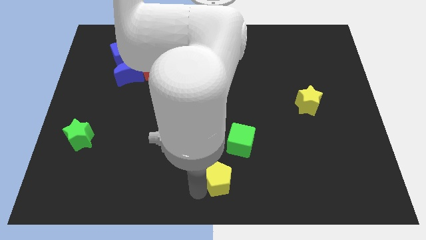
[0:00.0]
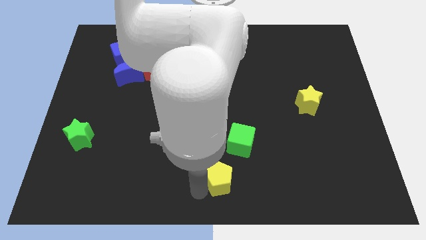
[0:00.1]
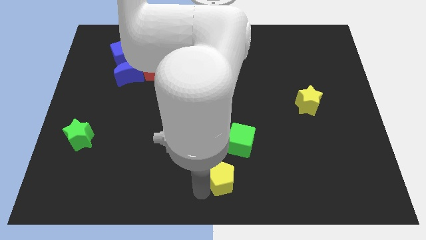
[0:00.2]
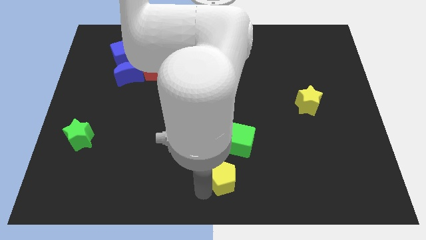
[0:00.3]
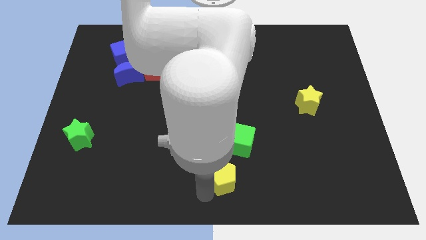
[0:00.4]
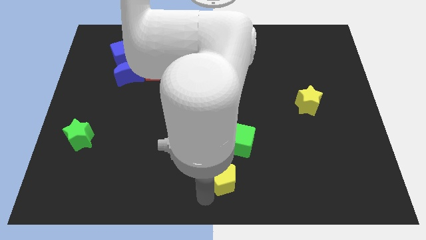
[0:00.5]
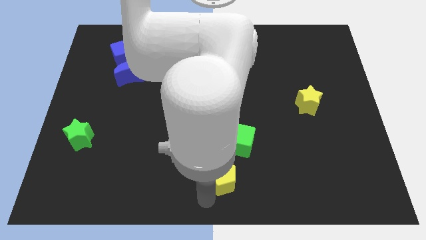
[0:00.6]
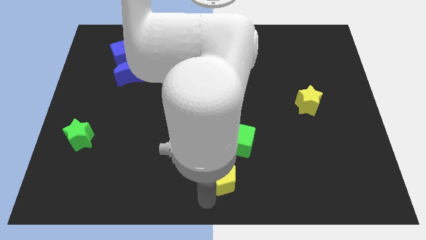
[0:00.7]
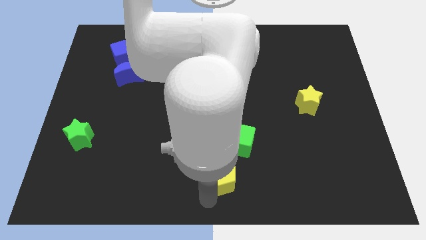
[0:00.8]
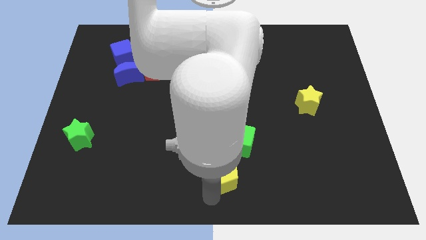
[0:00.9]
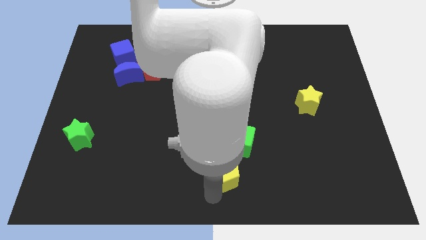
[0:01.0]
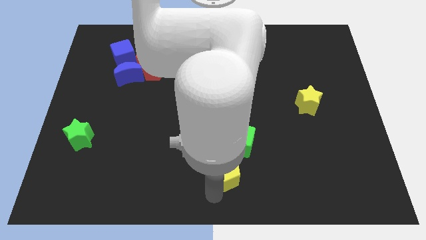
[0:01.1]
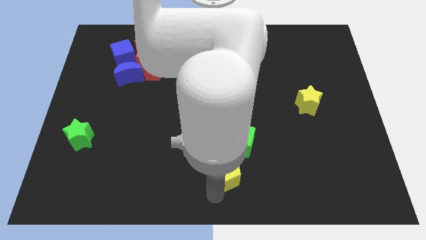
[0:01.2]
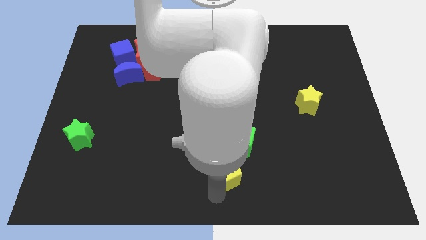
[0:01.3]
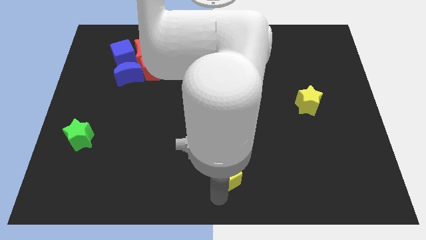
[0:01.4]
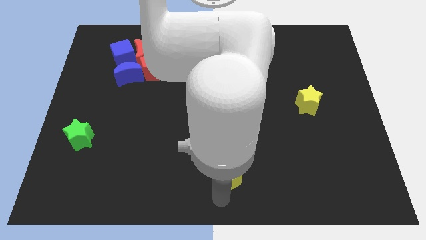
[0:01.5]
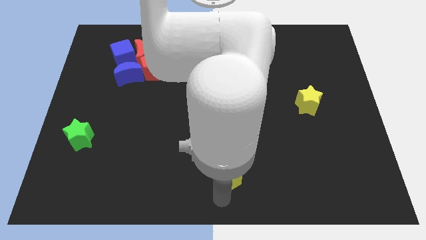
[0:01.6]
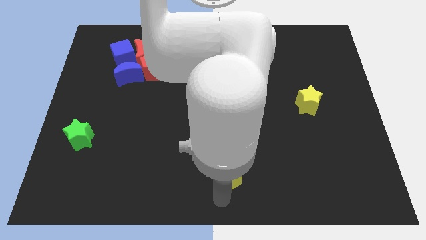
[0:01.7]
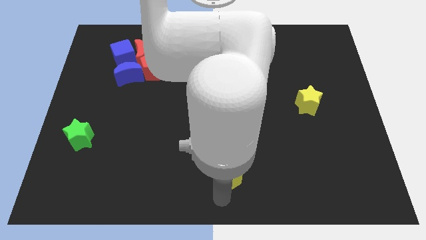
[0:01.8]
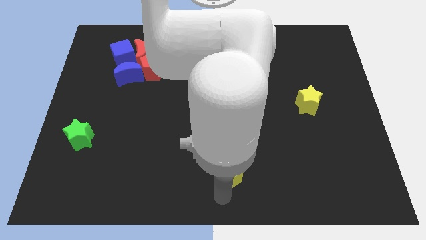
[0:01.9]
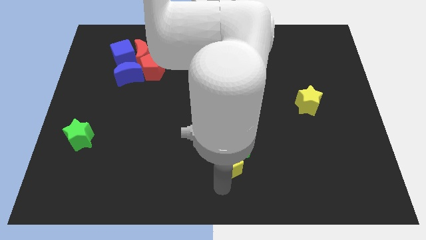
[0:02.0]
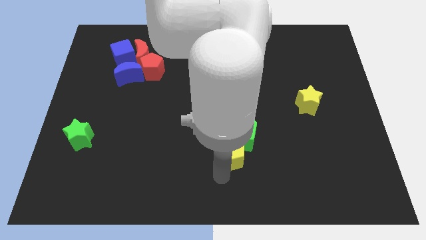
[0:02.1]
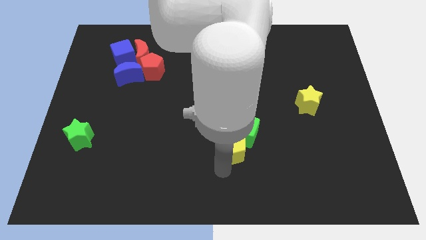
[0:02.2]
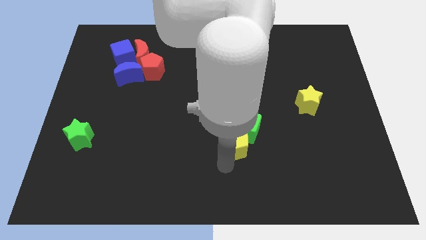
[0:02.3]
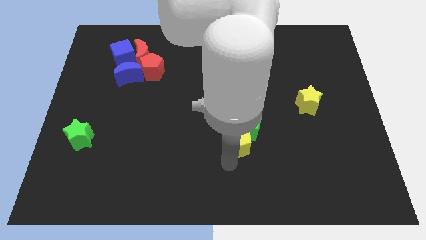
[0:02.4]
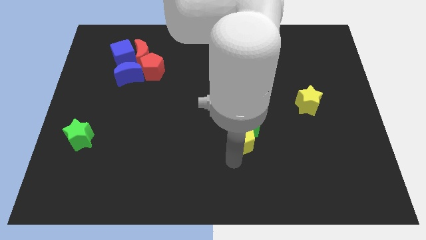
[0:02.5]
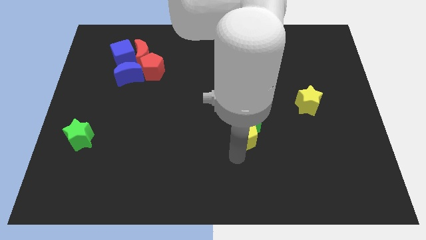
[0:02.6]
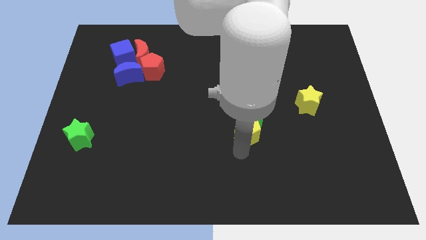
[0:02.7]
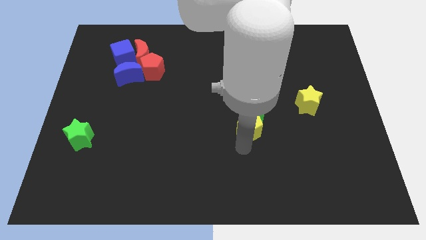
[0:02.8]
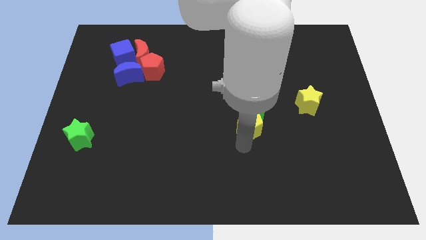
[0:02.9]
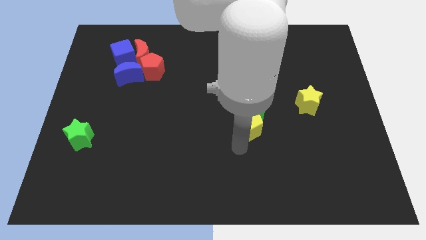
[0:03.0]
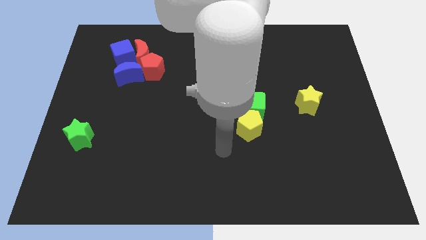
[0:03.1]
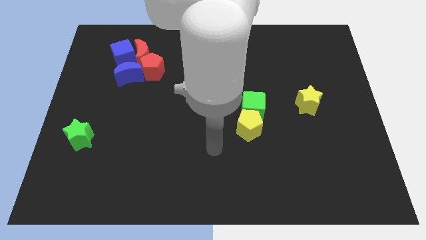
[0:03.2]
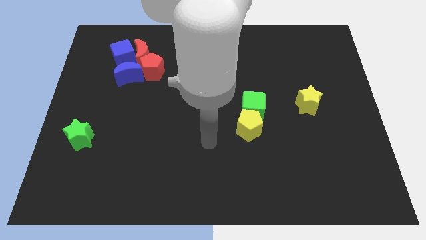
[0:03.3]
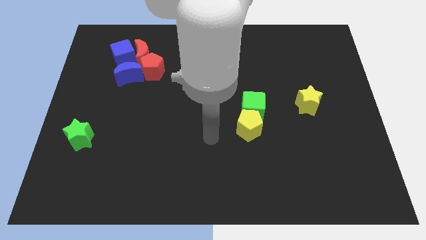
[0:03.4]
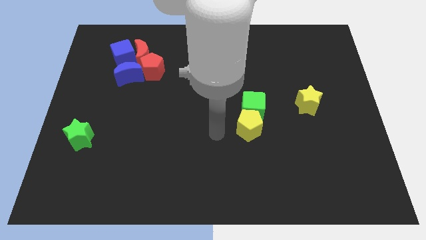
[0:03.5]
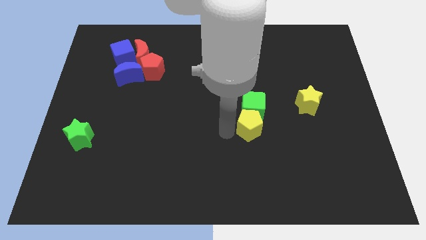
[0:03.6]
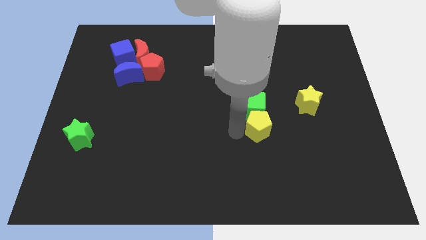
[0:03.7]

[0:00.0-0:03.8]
push the yellow pentagon in to the blue cube

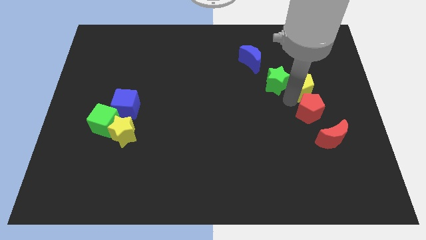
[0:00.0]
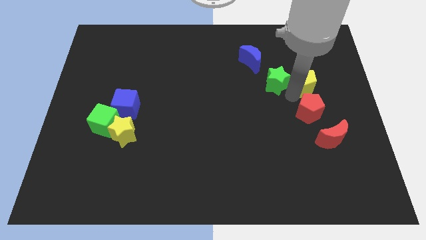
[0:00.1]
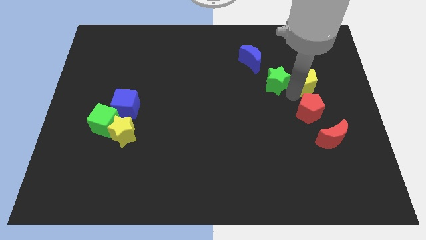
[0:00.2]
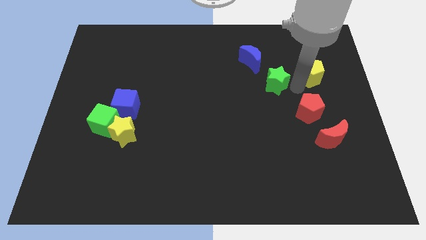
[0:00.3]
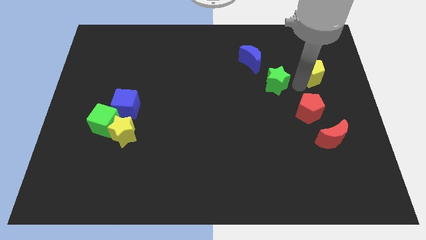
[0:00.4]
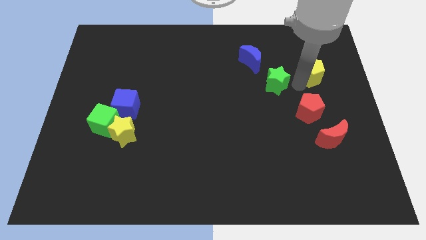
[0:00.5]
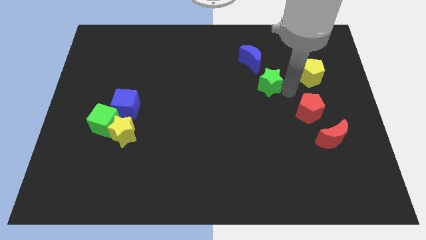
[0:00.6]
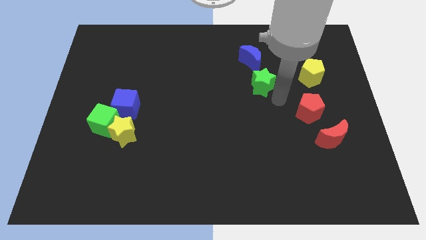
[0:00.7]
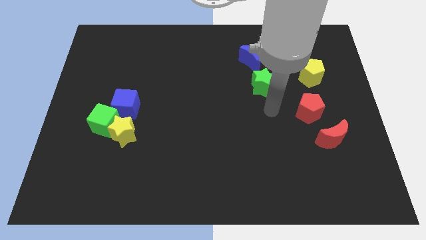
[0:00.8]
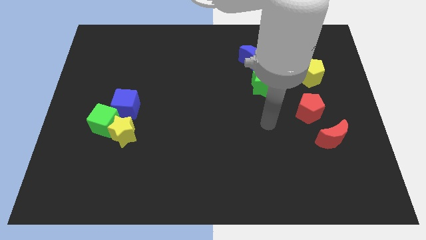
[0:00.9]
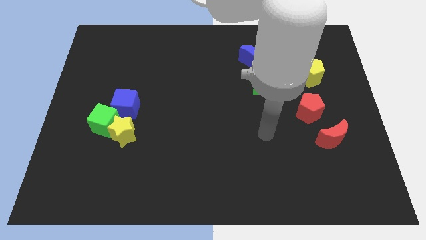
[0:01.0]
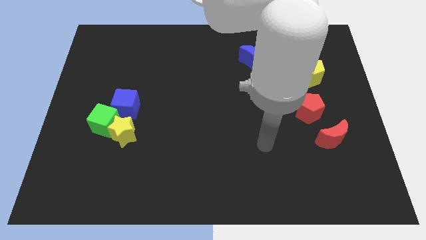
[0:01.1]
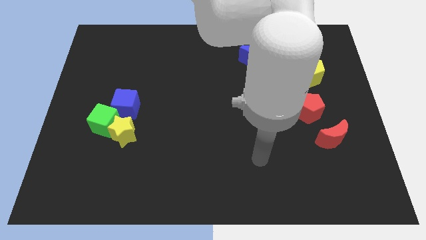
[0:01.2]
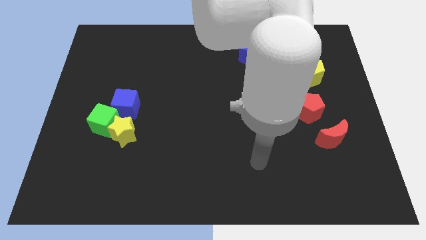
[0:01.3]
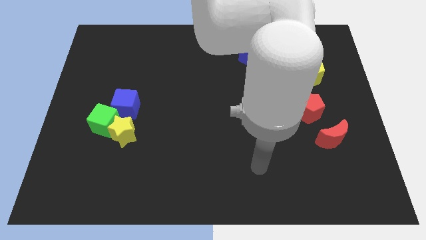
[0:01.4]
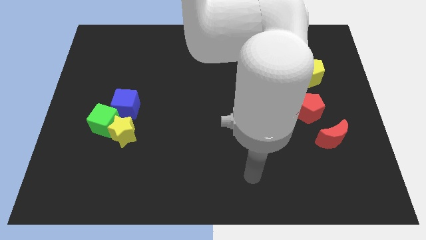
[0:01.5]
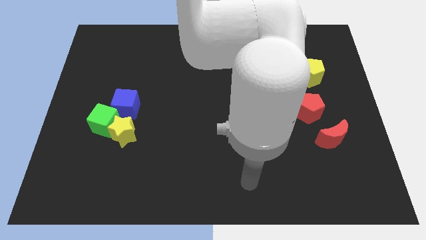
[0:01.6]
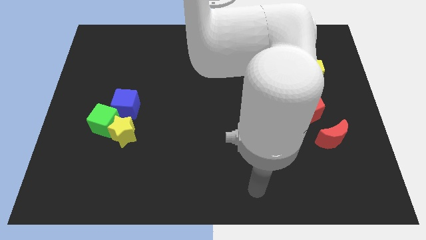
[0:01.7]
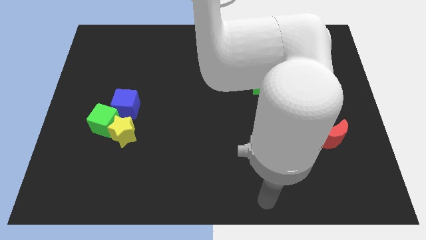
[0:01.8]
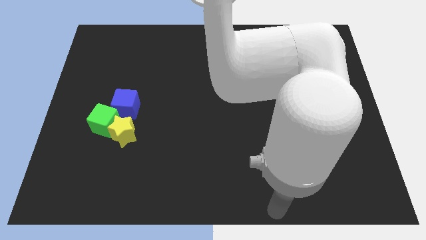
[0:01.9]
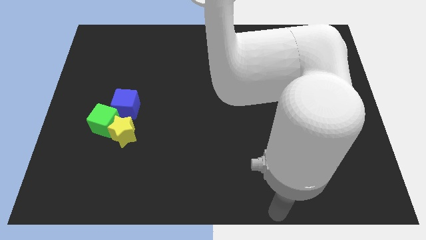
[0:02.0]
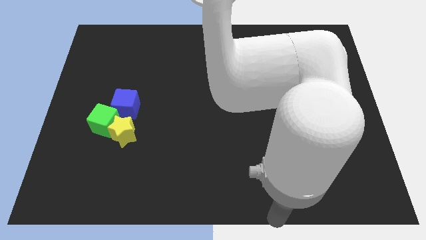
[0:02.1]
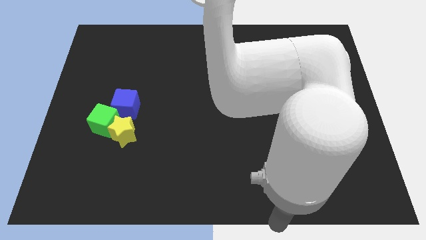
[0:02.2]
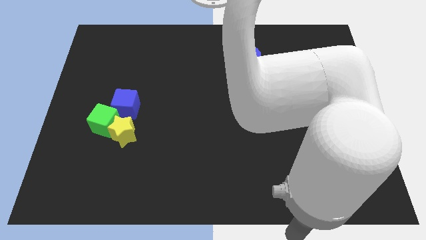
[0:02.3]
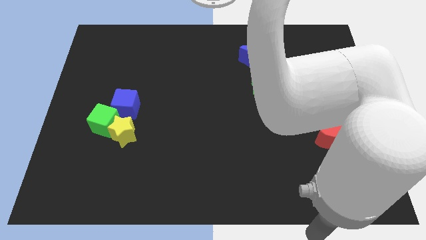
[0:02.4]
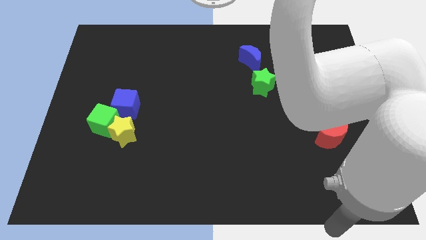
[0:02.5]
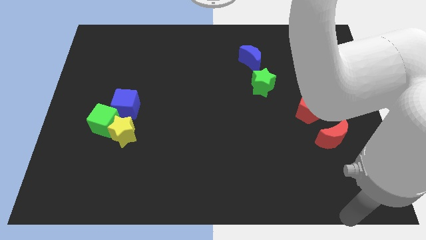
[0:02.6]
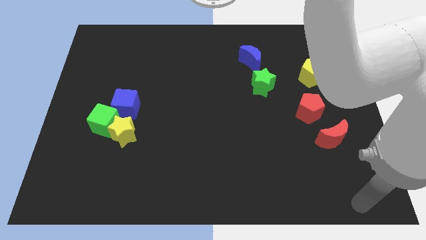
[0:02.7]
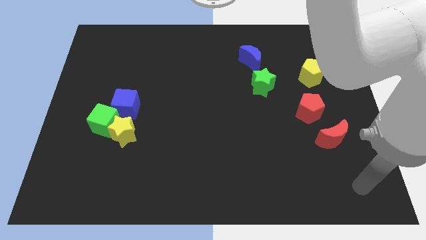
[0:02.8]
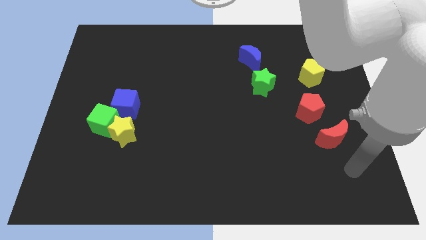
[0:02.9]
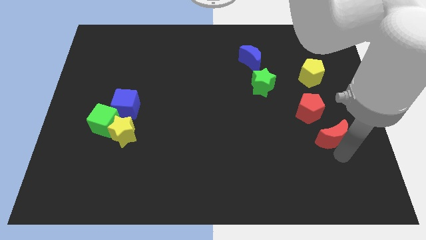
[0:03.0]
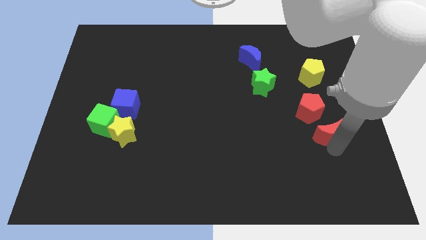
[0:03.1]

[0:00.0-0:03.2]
move the green star slight left

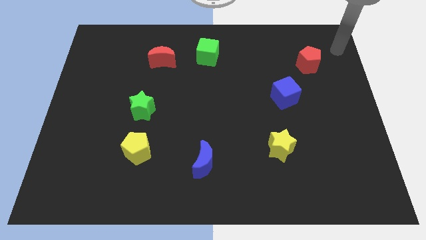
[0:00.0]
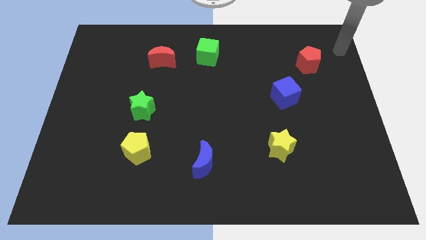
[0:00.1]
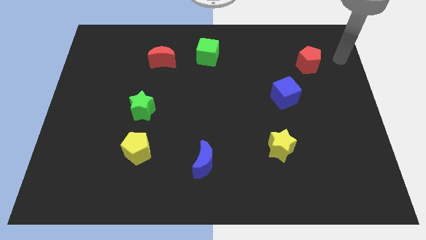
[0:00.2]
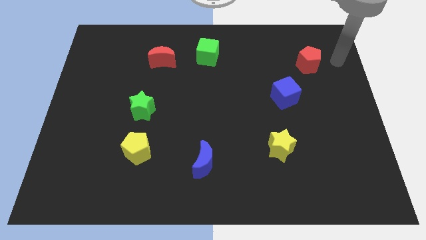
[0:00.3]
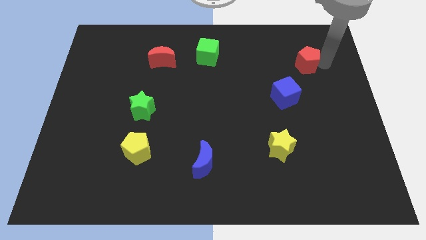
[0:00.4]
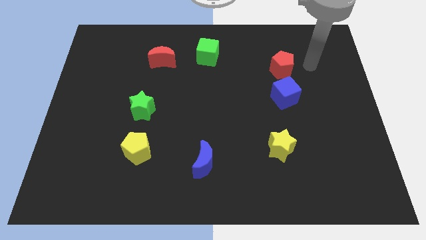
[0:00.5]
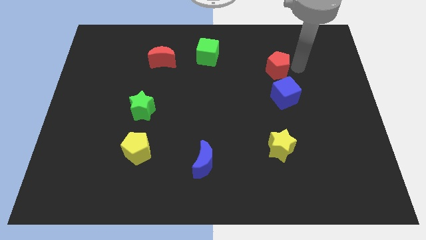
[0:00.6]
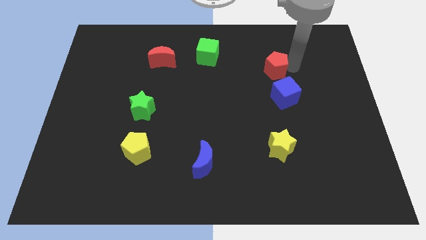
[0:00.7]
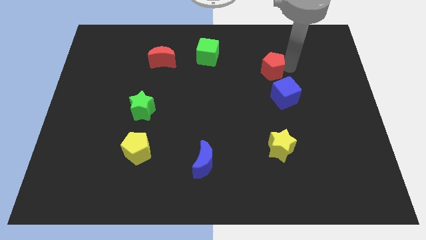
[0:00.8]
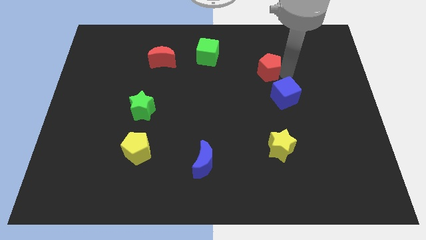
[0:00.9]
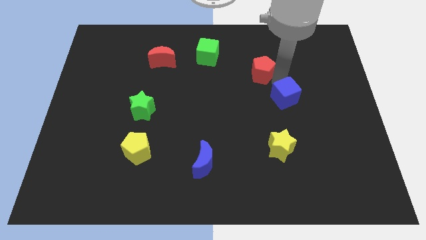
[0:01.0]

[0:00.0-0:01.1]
move the red pentagon slightly to the left

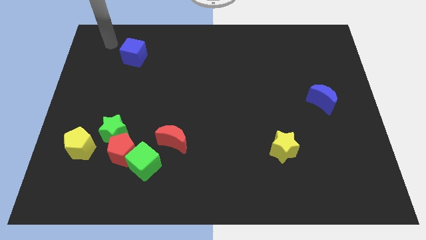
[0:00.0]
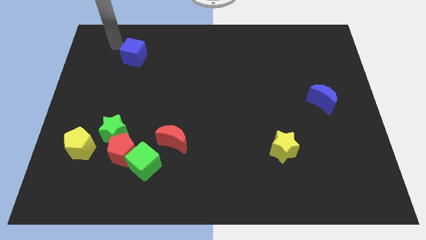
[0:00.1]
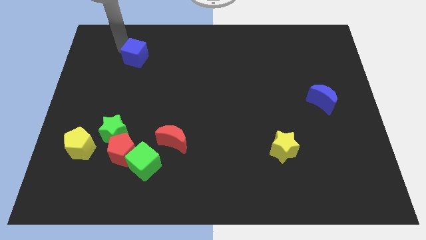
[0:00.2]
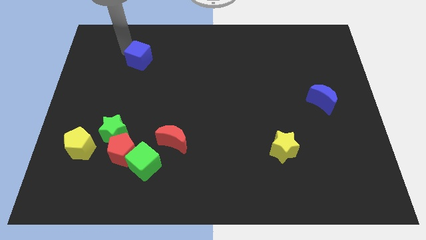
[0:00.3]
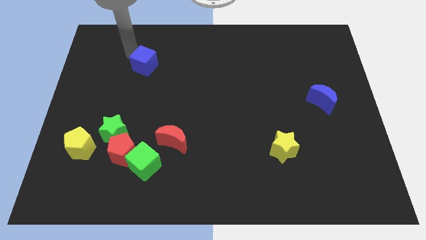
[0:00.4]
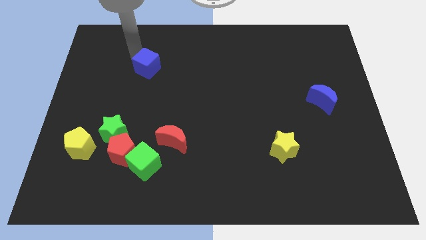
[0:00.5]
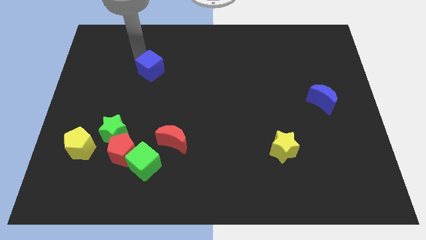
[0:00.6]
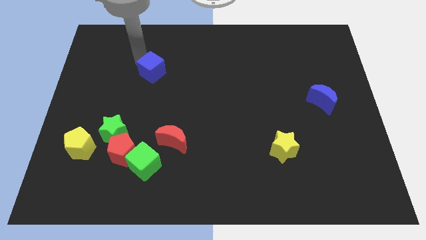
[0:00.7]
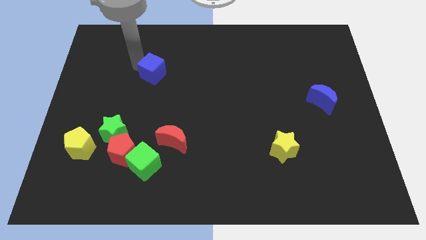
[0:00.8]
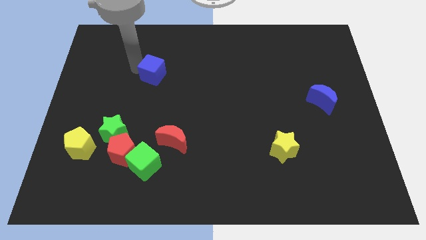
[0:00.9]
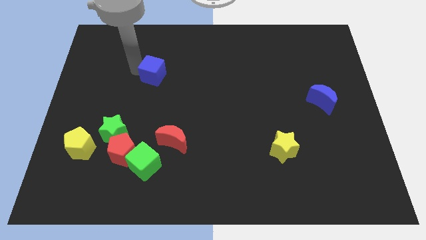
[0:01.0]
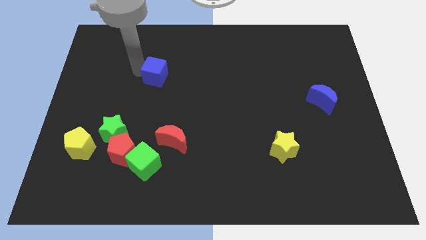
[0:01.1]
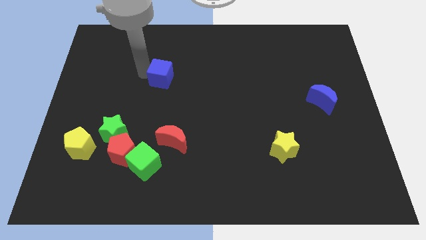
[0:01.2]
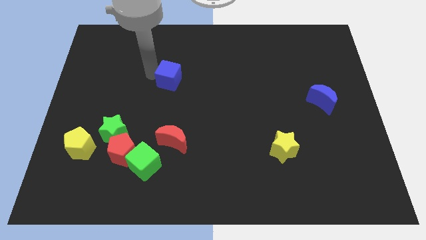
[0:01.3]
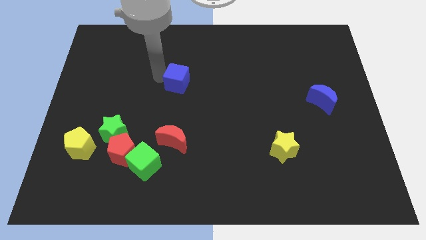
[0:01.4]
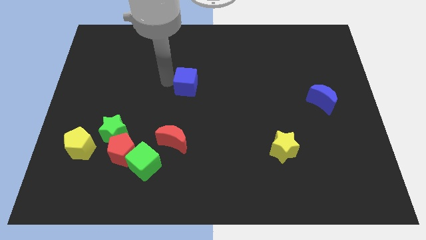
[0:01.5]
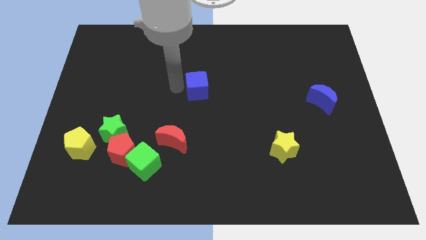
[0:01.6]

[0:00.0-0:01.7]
push blue cube diagonally below
